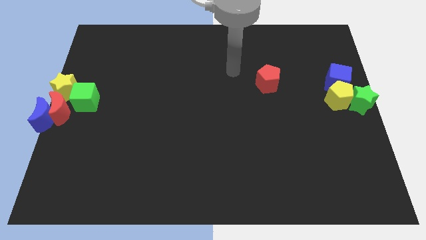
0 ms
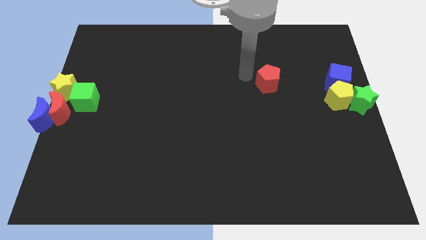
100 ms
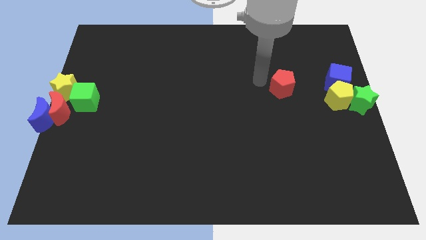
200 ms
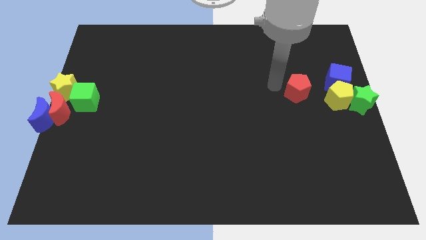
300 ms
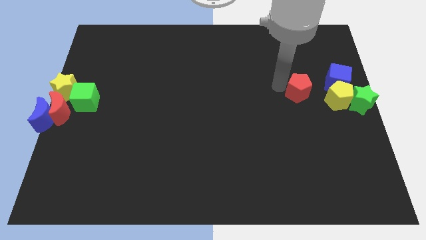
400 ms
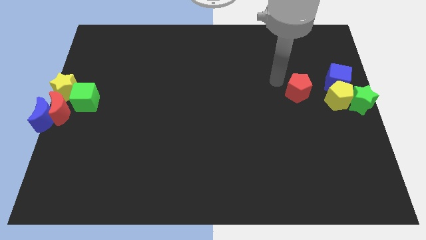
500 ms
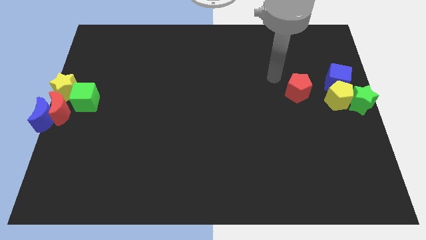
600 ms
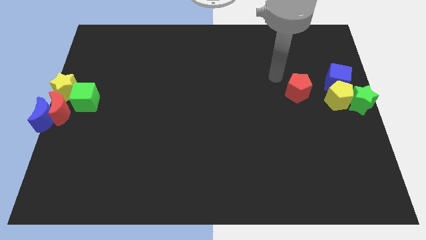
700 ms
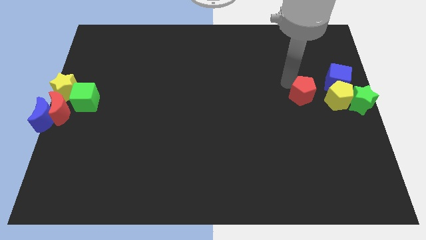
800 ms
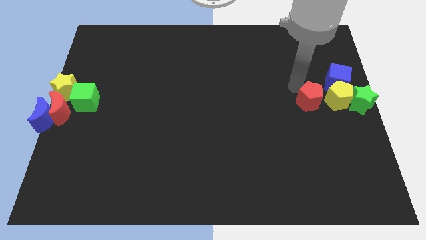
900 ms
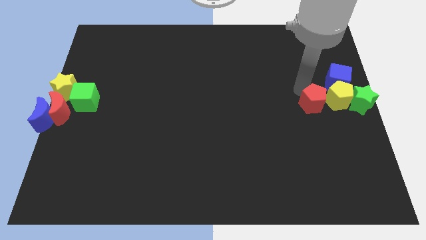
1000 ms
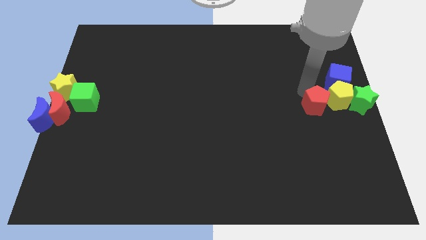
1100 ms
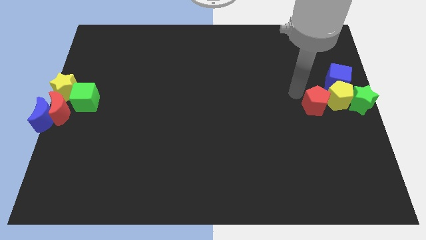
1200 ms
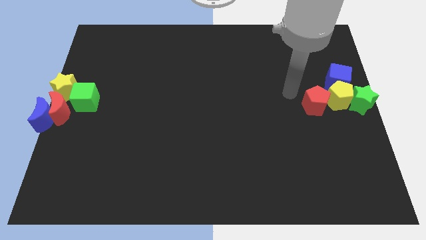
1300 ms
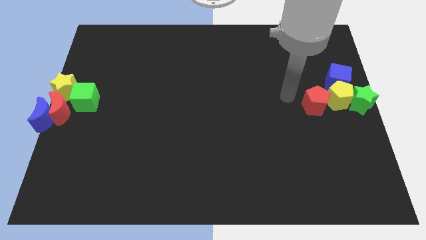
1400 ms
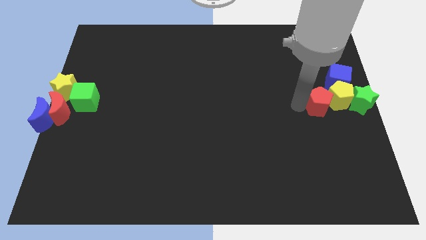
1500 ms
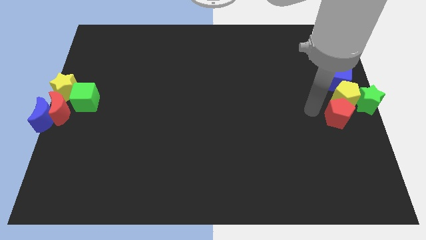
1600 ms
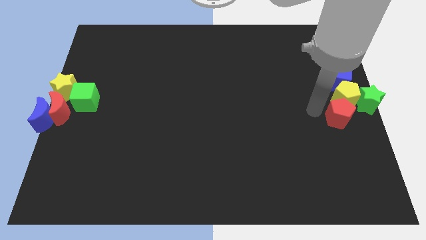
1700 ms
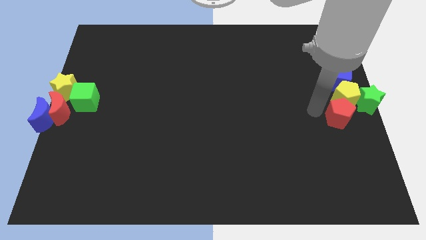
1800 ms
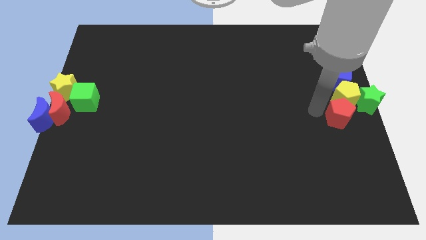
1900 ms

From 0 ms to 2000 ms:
place the red pentagon to the bottom of the yellow pentagon

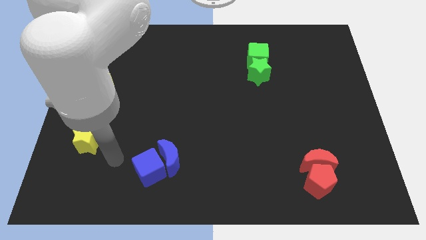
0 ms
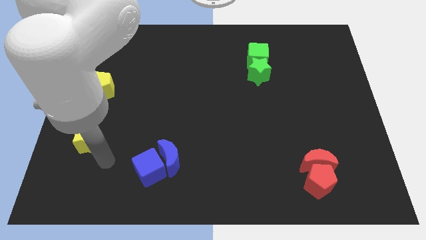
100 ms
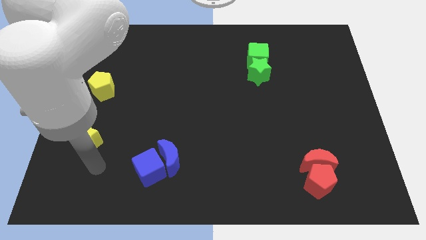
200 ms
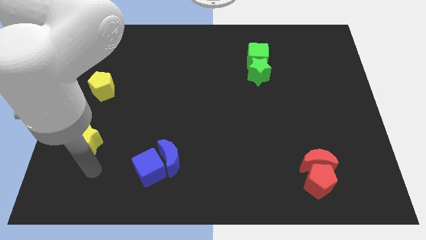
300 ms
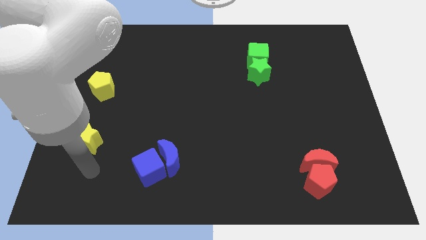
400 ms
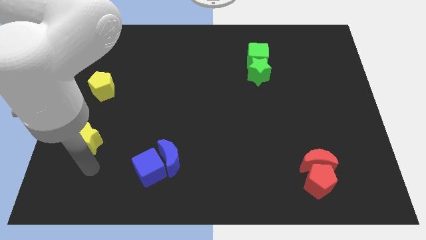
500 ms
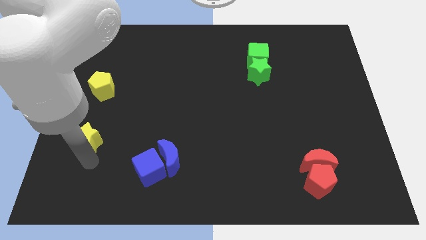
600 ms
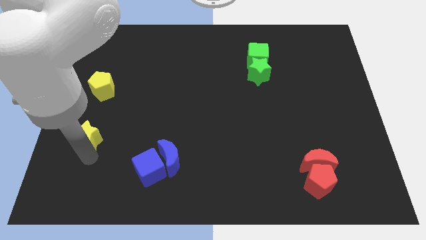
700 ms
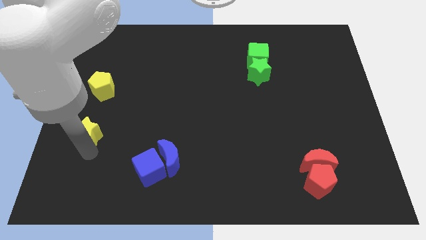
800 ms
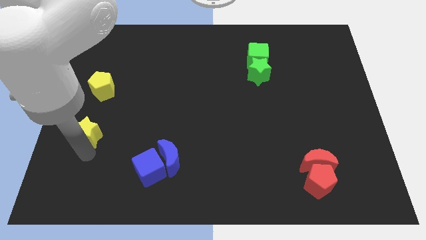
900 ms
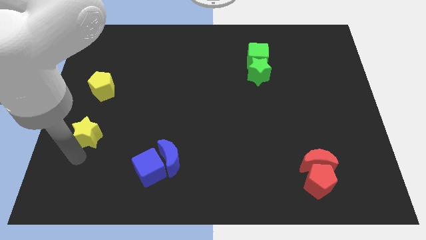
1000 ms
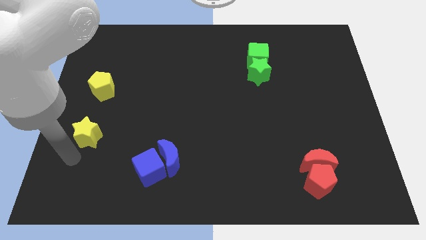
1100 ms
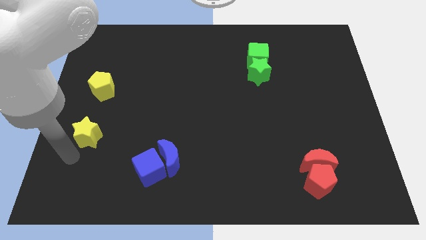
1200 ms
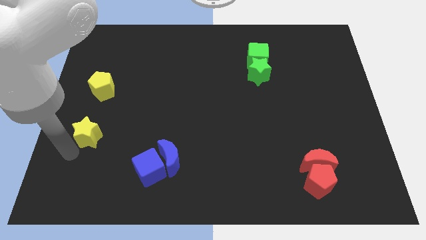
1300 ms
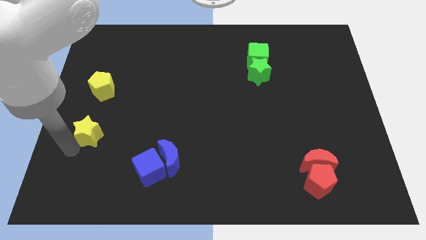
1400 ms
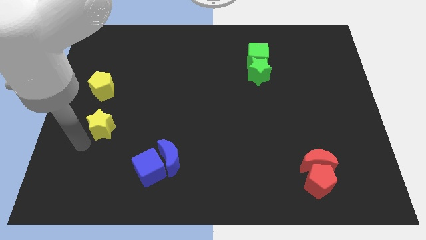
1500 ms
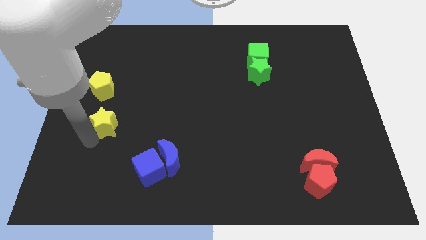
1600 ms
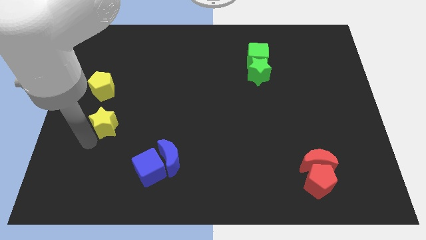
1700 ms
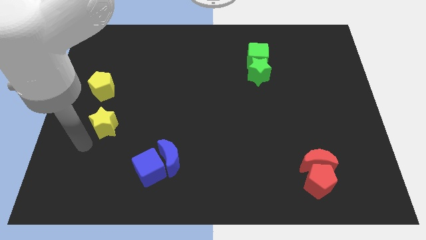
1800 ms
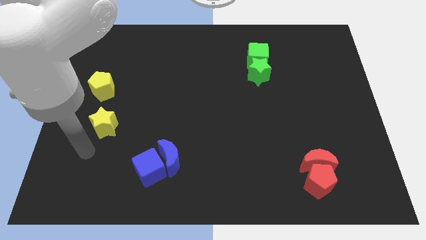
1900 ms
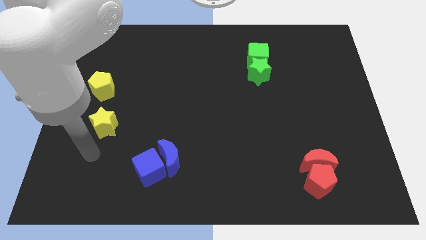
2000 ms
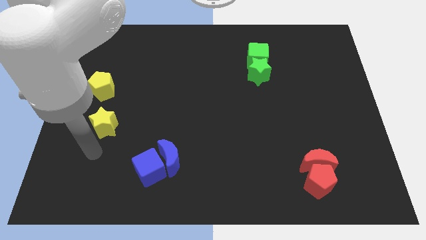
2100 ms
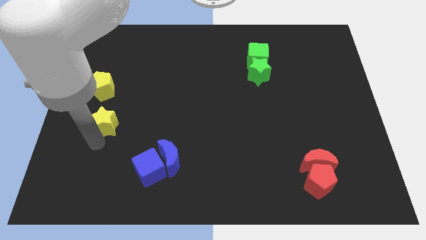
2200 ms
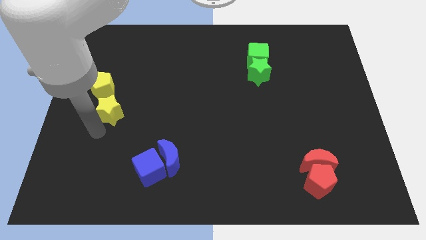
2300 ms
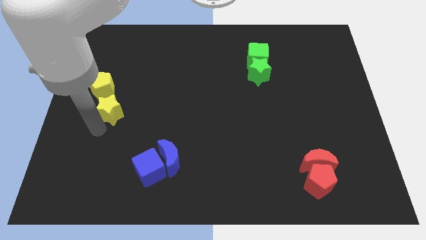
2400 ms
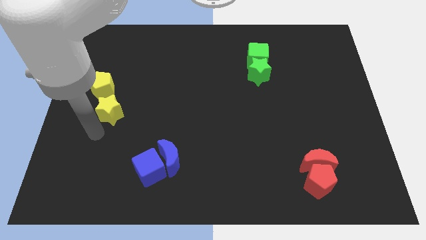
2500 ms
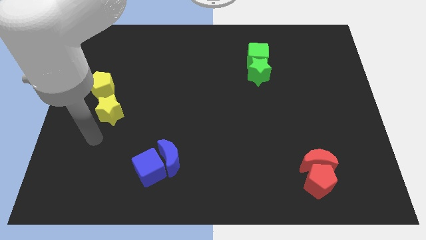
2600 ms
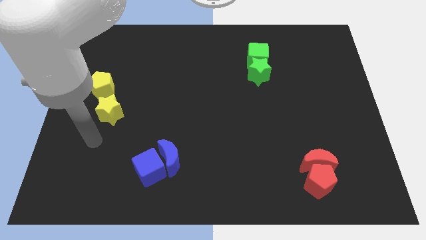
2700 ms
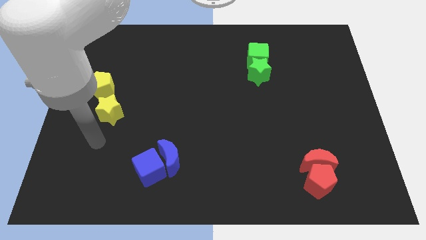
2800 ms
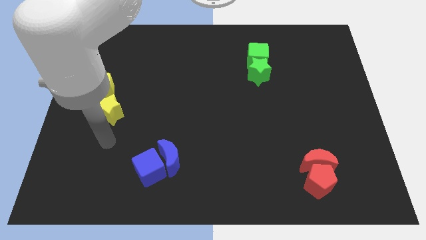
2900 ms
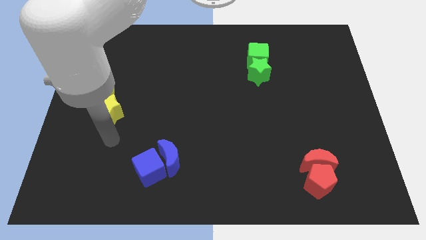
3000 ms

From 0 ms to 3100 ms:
push yellow star below the yellow pentagon

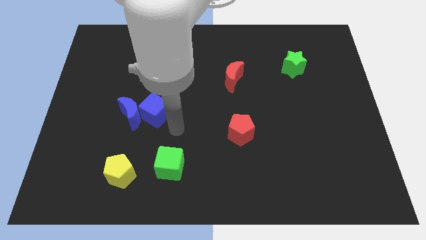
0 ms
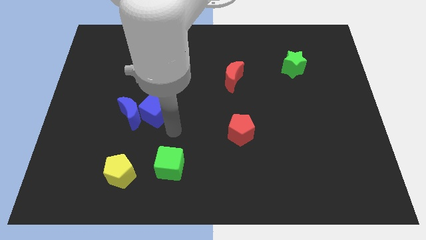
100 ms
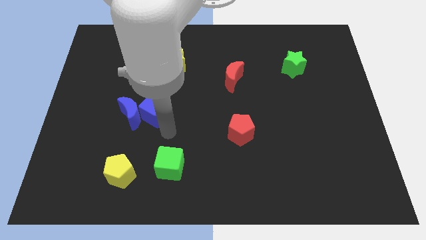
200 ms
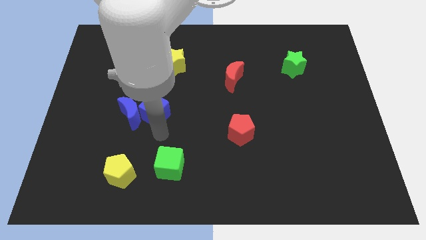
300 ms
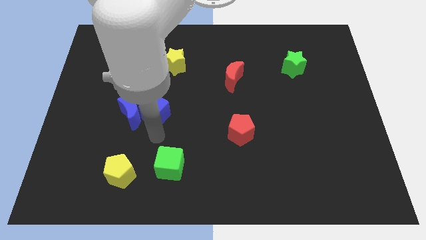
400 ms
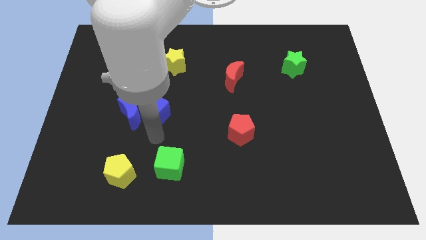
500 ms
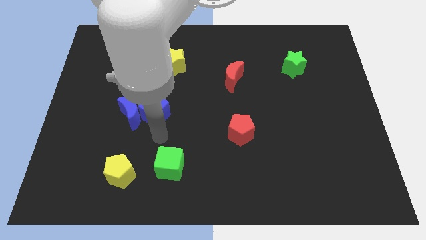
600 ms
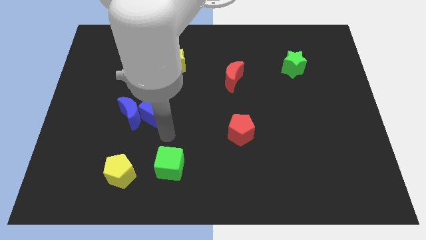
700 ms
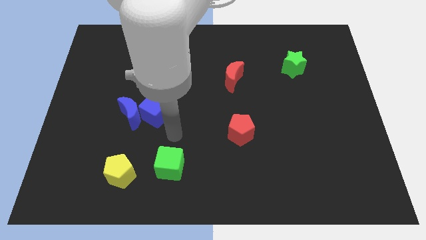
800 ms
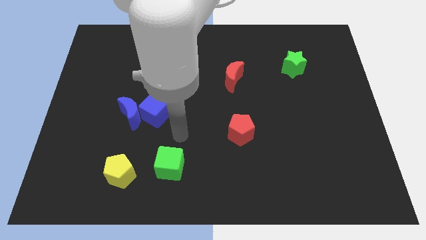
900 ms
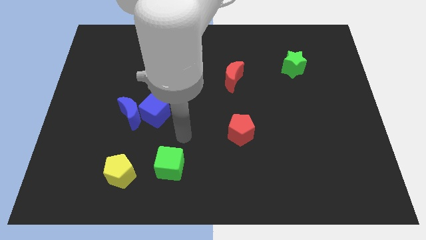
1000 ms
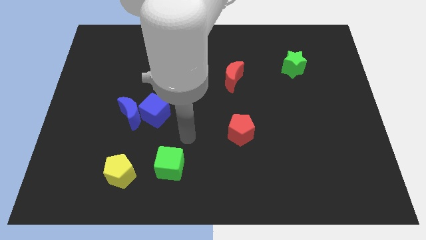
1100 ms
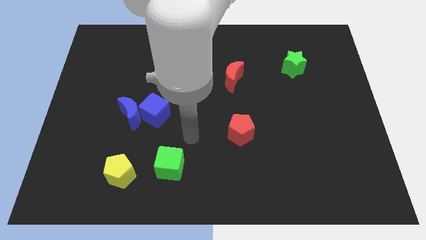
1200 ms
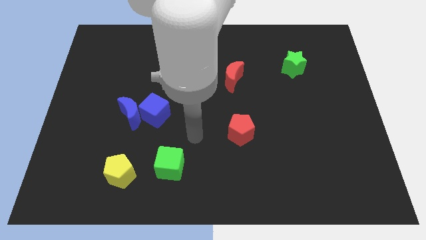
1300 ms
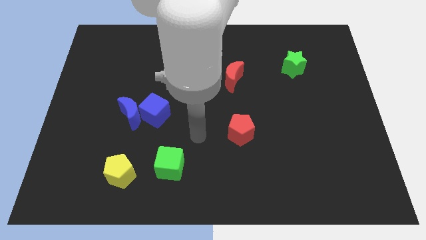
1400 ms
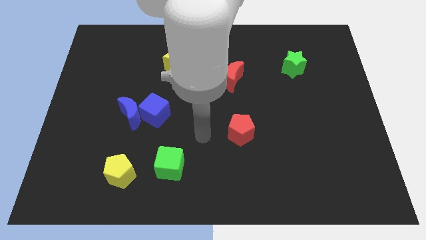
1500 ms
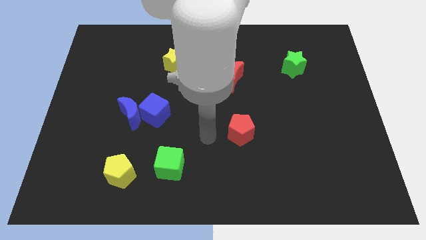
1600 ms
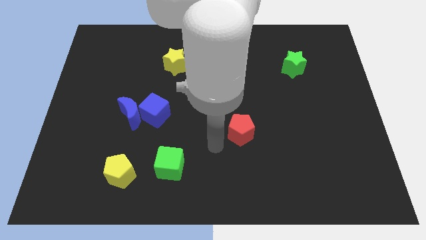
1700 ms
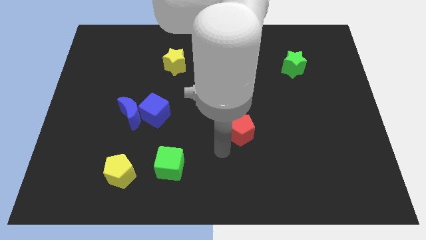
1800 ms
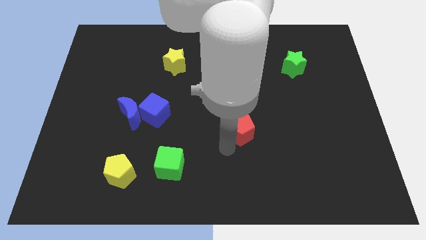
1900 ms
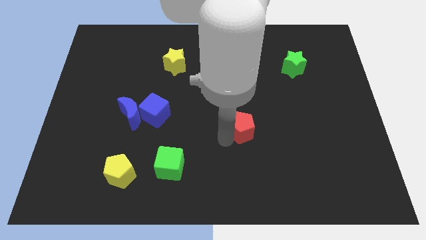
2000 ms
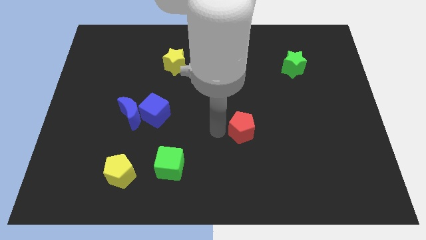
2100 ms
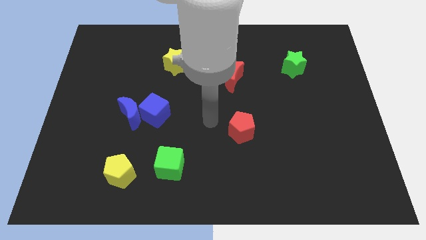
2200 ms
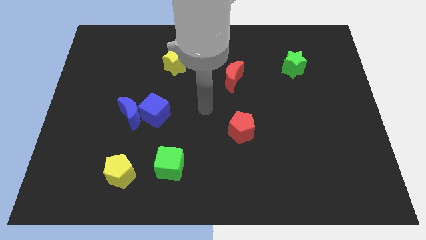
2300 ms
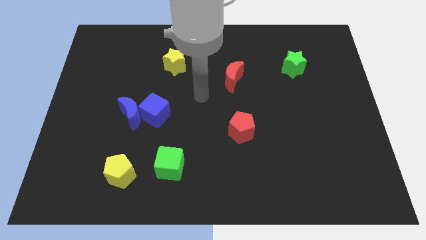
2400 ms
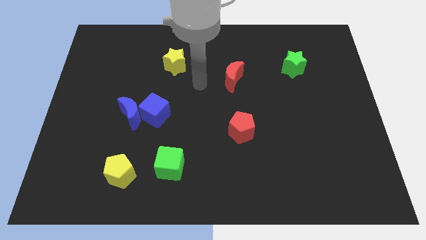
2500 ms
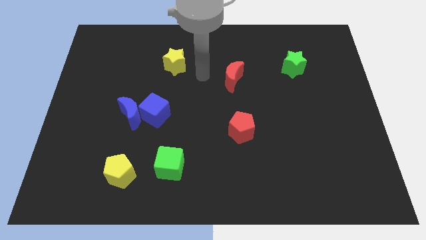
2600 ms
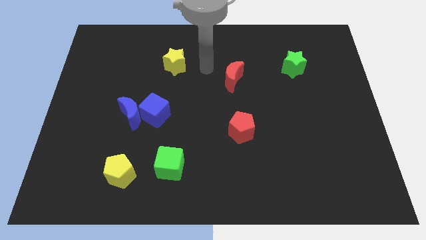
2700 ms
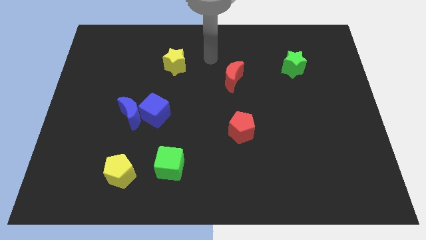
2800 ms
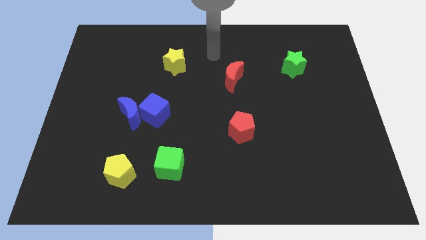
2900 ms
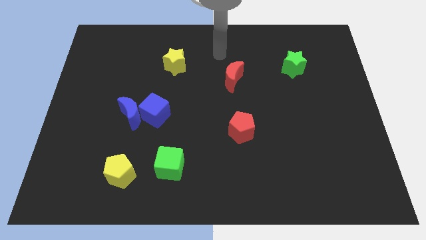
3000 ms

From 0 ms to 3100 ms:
move your arm towards top center

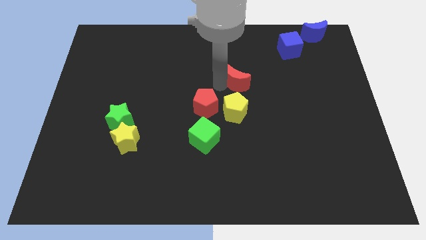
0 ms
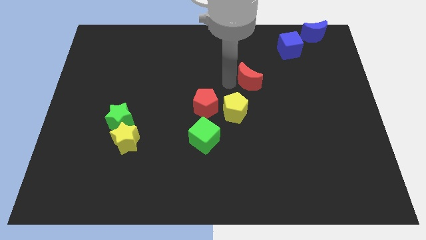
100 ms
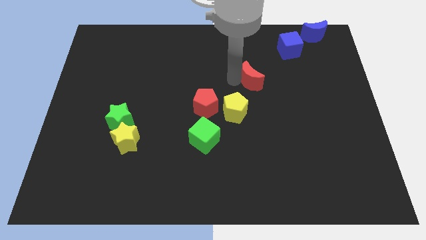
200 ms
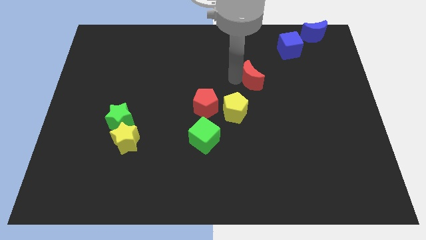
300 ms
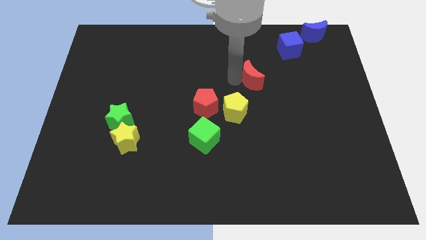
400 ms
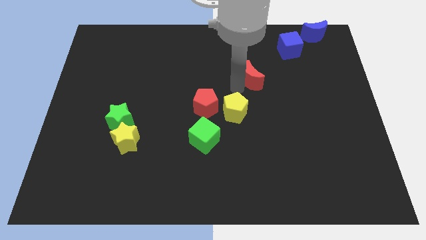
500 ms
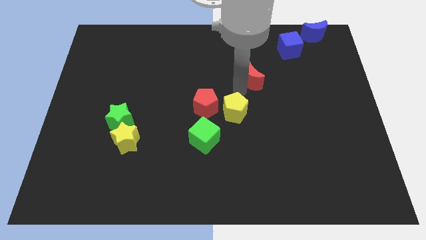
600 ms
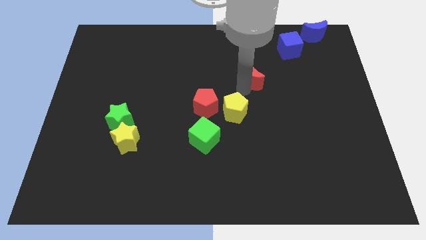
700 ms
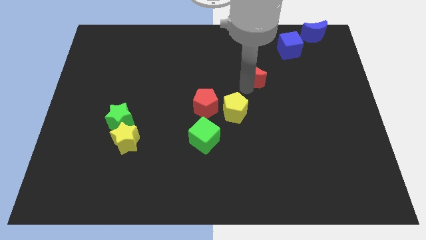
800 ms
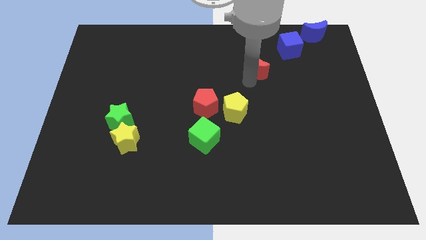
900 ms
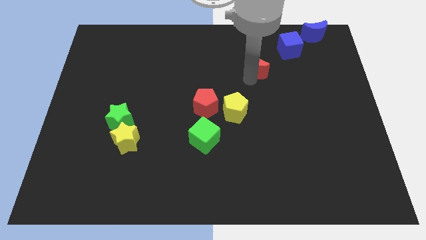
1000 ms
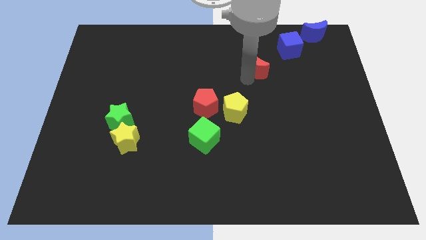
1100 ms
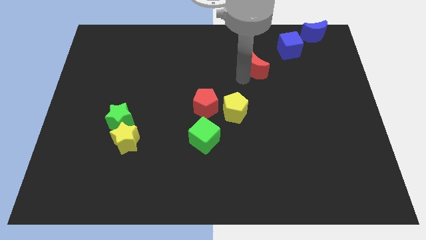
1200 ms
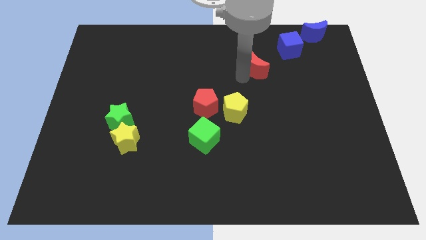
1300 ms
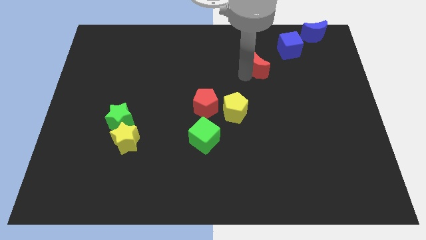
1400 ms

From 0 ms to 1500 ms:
push the red moon towards the blue cube
